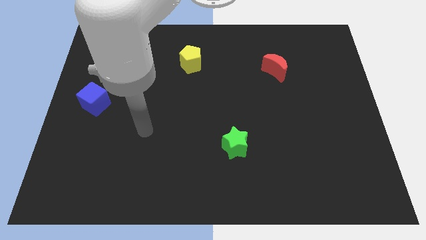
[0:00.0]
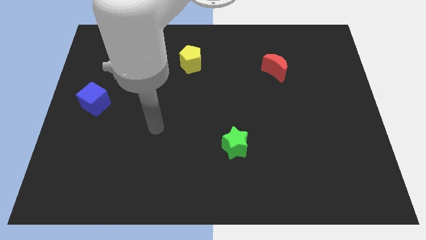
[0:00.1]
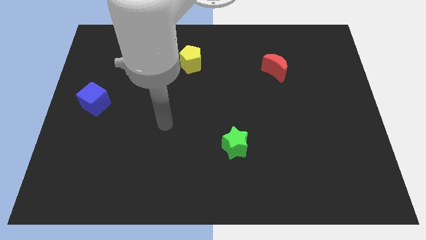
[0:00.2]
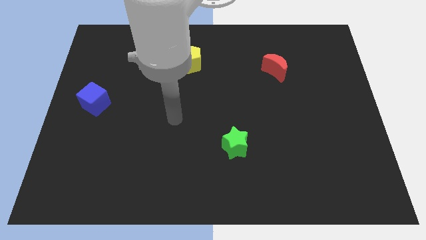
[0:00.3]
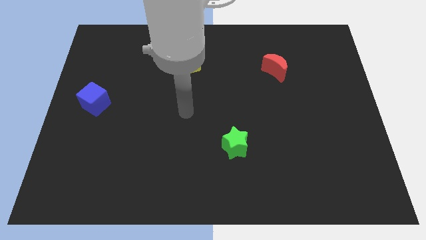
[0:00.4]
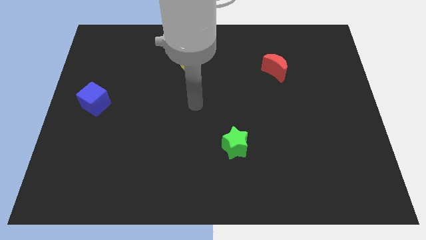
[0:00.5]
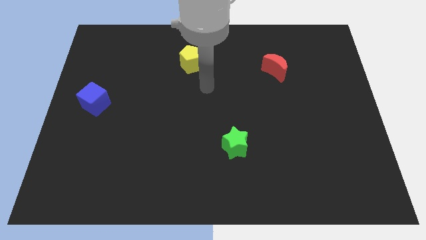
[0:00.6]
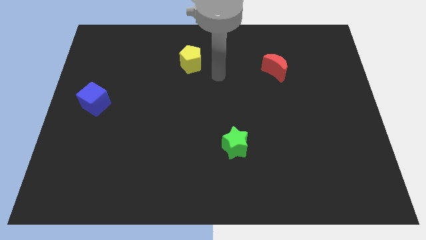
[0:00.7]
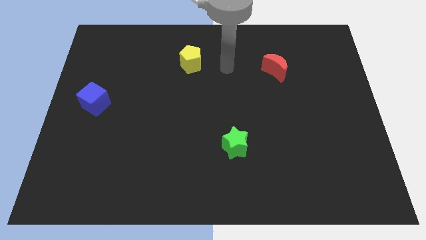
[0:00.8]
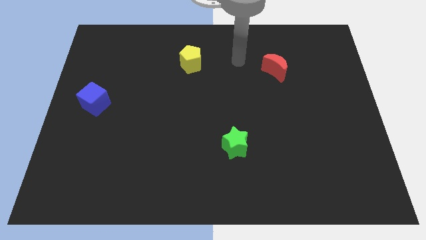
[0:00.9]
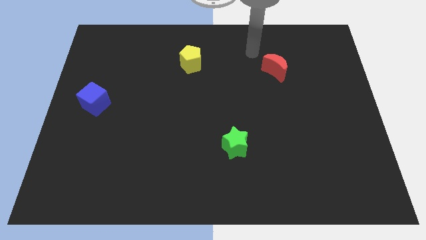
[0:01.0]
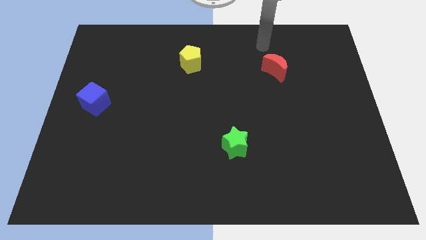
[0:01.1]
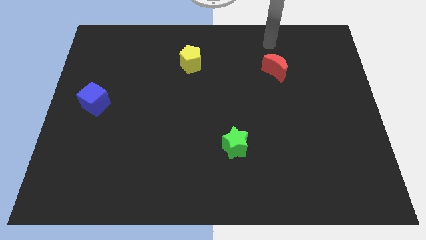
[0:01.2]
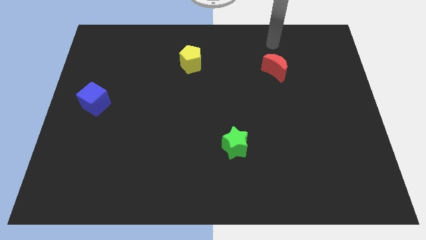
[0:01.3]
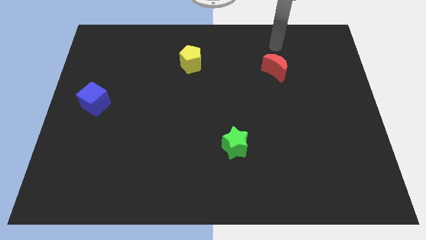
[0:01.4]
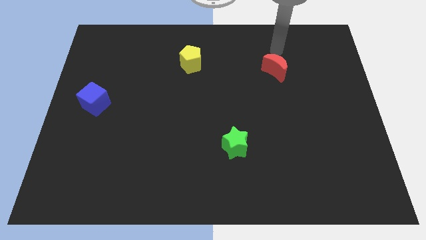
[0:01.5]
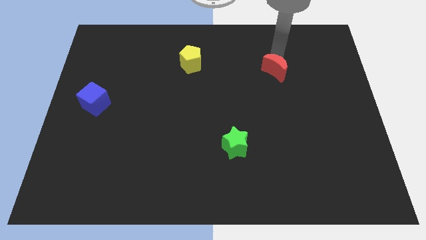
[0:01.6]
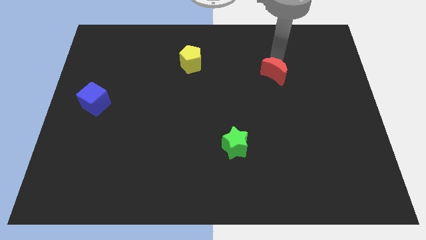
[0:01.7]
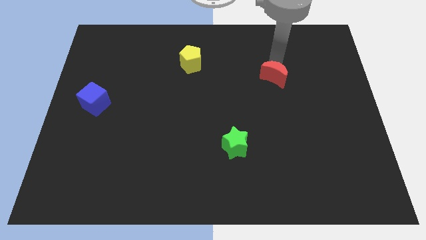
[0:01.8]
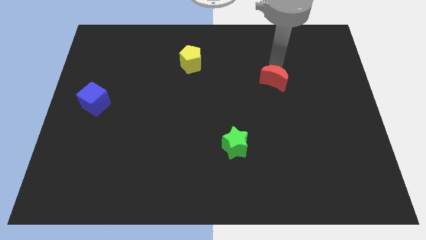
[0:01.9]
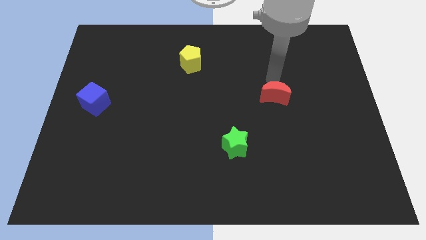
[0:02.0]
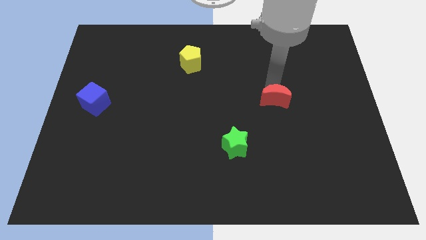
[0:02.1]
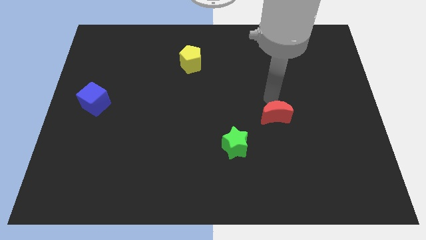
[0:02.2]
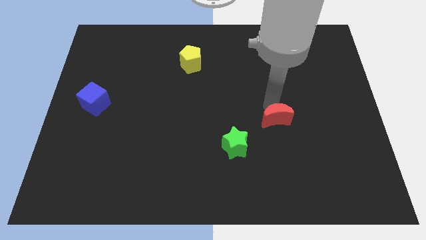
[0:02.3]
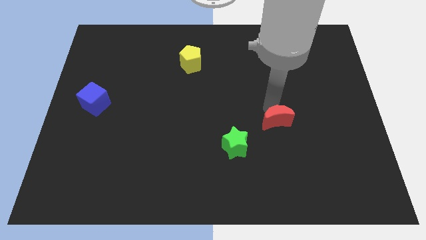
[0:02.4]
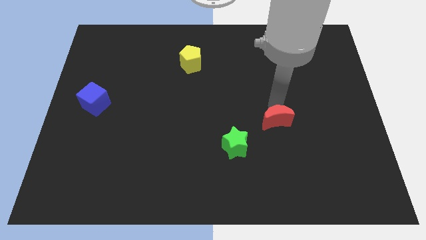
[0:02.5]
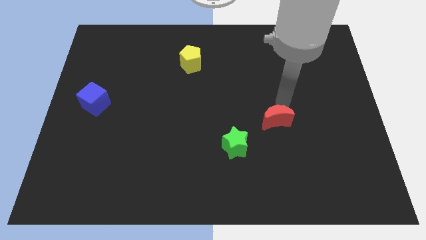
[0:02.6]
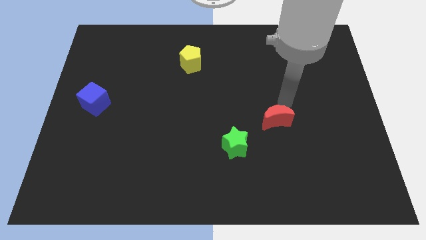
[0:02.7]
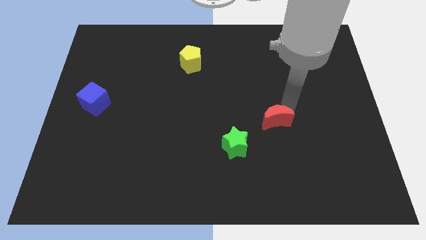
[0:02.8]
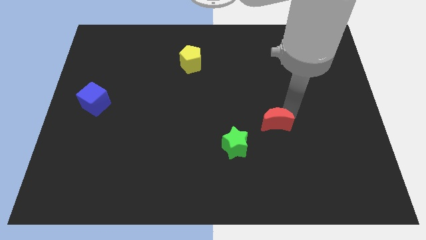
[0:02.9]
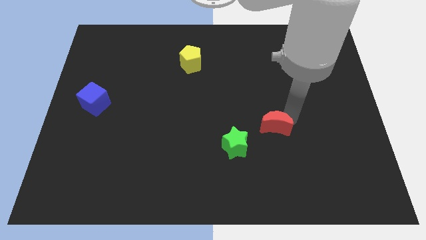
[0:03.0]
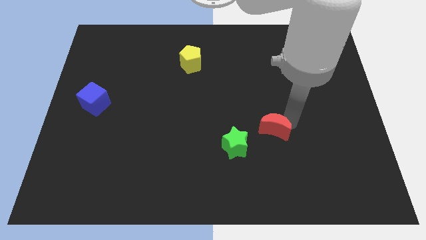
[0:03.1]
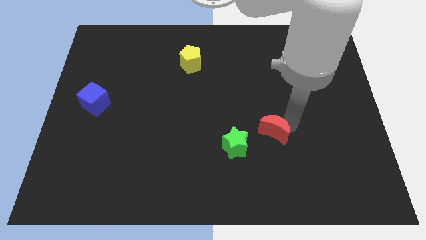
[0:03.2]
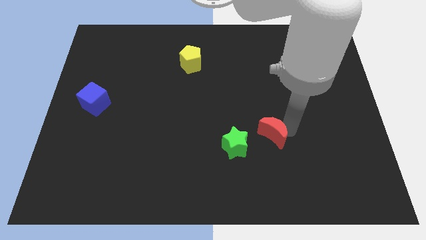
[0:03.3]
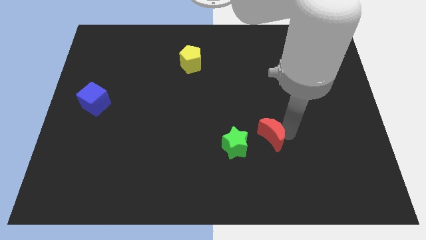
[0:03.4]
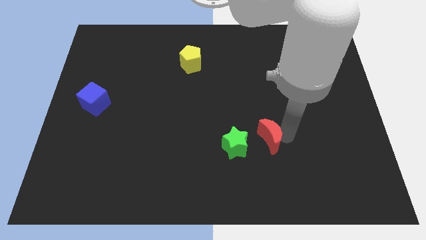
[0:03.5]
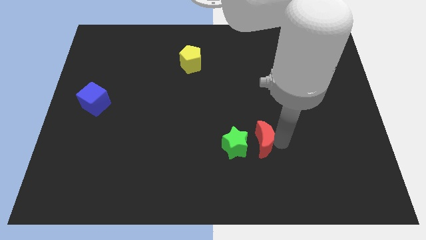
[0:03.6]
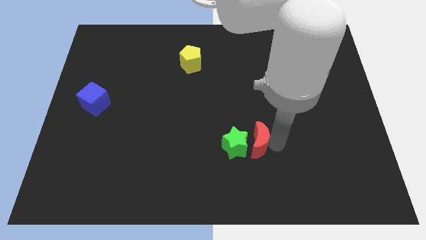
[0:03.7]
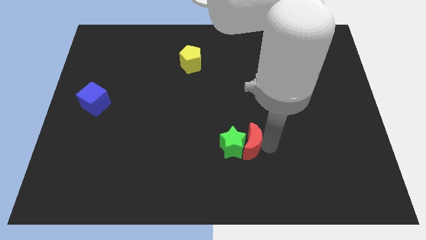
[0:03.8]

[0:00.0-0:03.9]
put the moon towards the green star

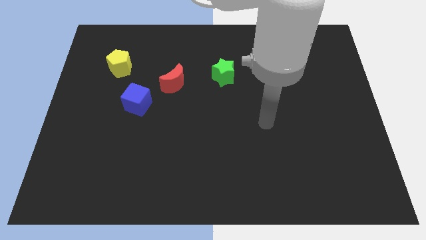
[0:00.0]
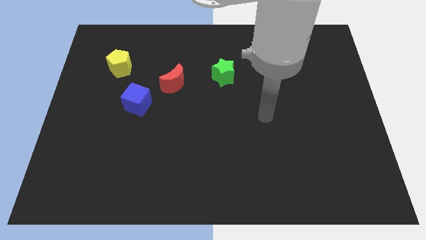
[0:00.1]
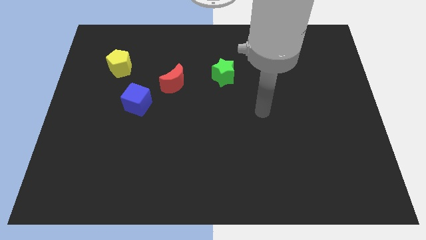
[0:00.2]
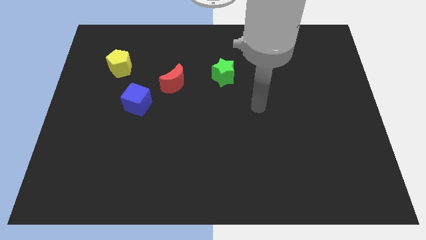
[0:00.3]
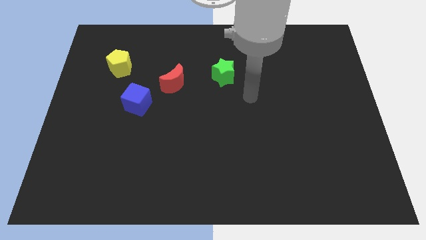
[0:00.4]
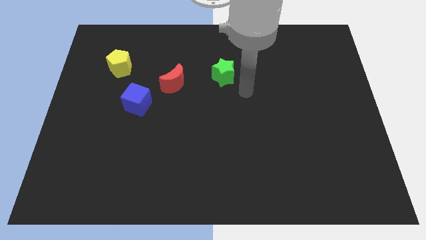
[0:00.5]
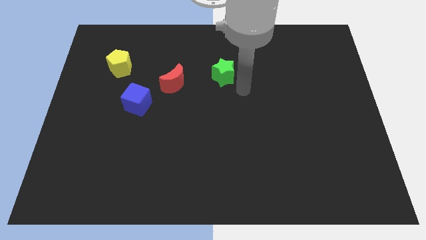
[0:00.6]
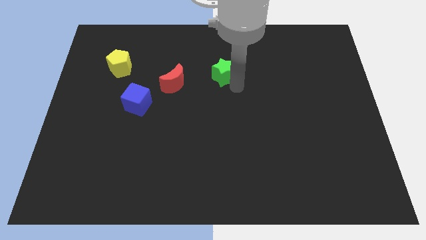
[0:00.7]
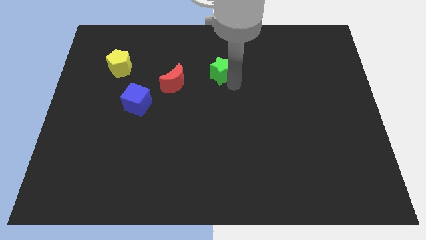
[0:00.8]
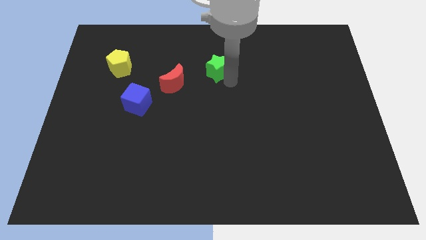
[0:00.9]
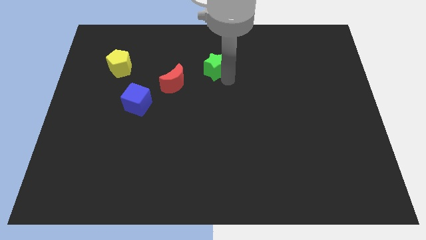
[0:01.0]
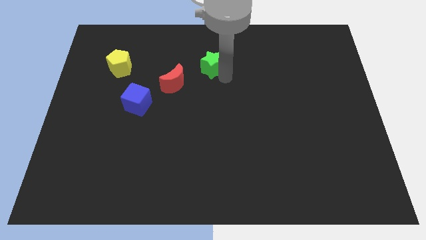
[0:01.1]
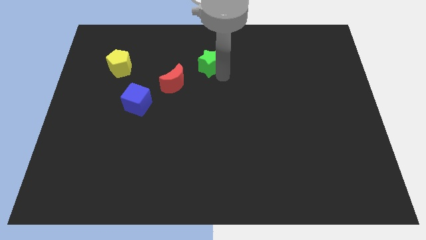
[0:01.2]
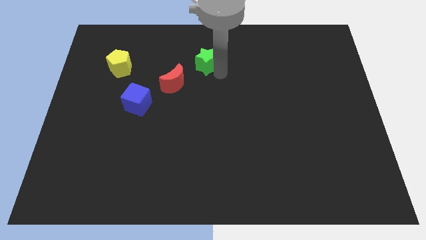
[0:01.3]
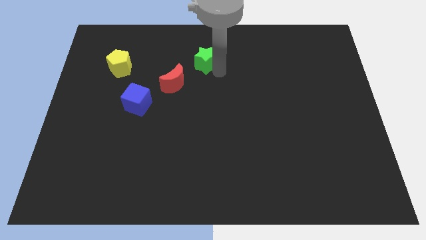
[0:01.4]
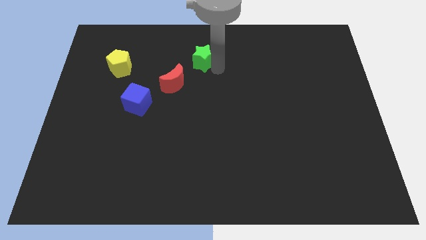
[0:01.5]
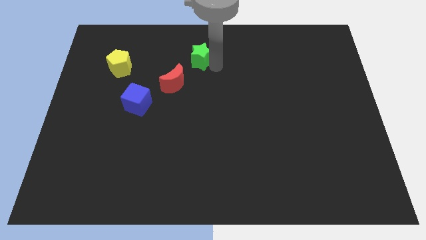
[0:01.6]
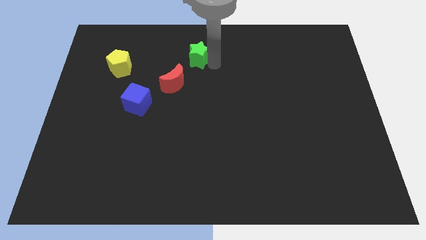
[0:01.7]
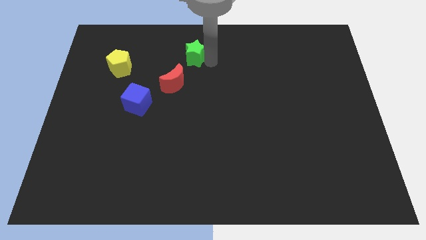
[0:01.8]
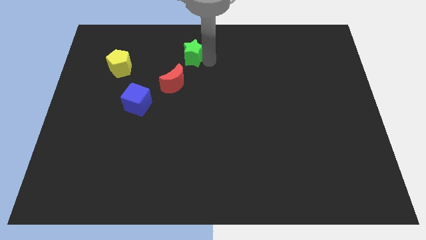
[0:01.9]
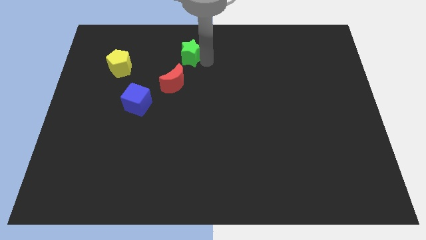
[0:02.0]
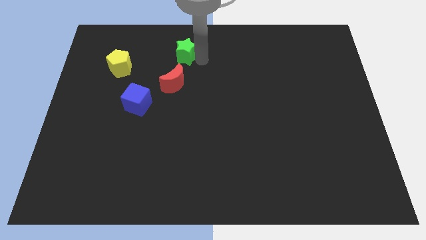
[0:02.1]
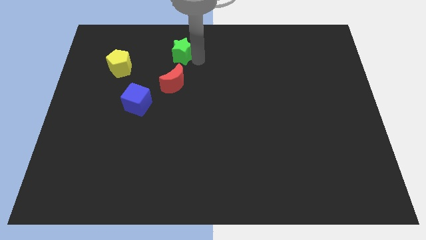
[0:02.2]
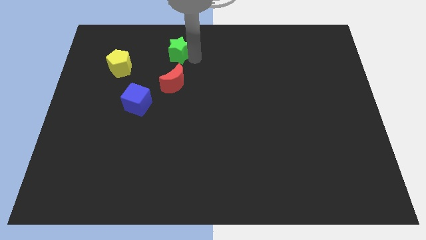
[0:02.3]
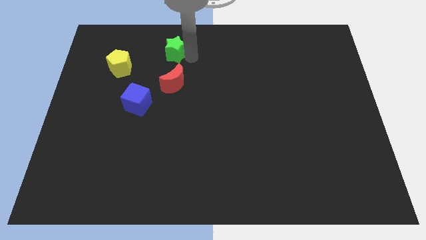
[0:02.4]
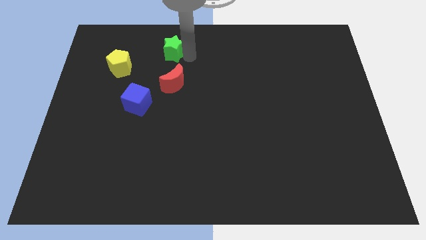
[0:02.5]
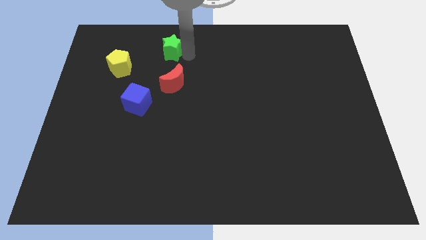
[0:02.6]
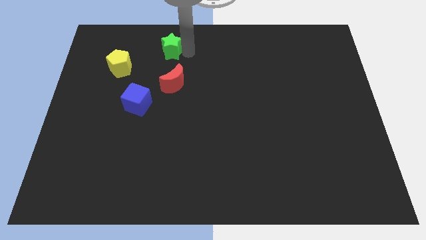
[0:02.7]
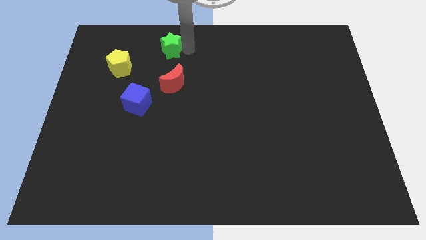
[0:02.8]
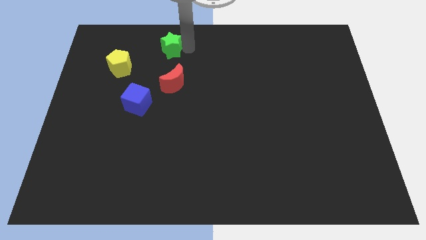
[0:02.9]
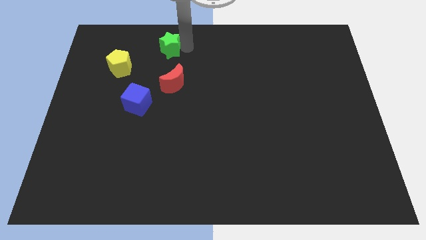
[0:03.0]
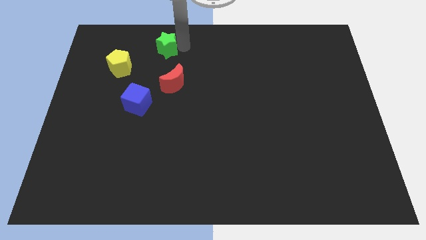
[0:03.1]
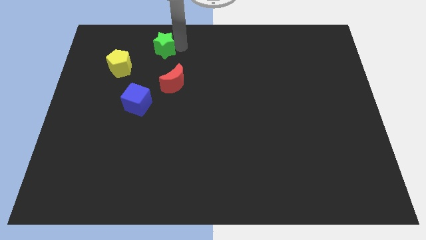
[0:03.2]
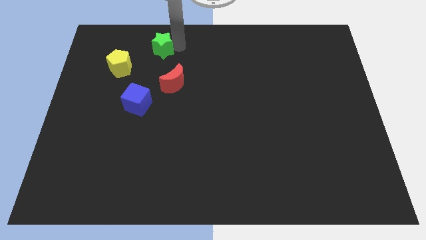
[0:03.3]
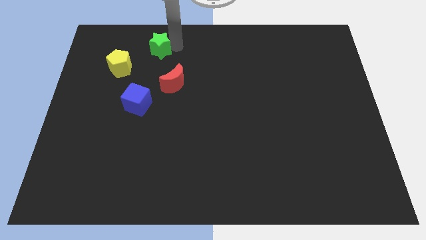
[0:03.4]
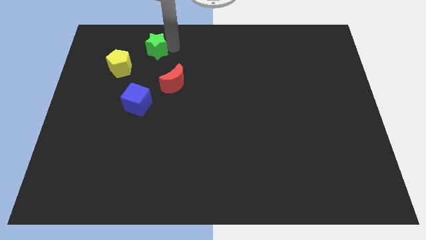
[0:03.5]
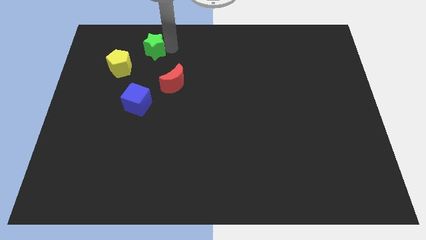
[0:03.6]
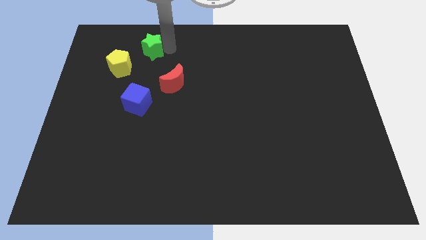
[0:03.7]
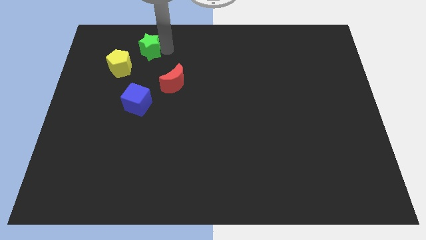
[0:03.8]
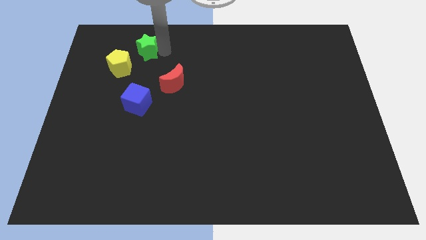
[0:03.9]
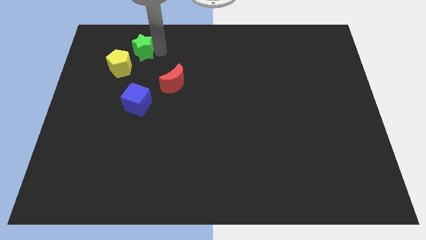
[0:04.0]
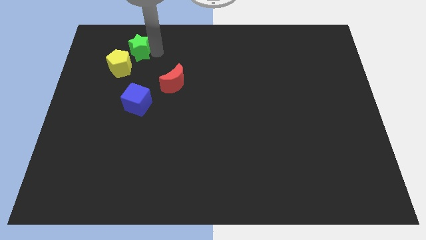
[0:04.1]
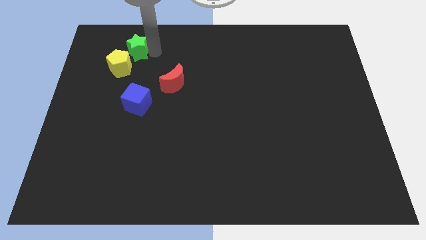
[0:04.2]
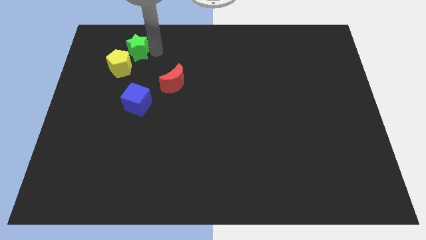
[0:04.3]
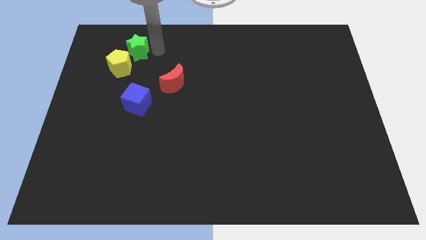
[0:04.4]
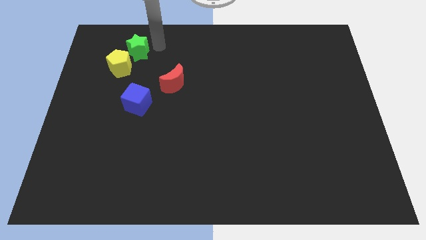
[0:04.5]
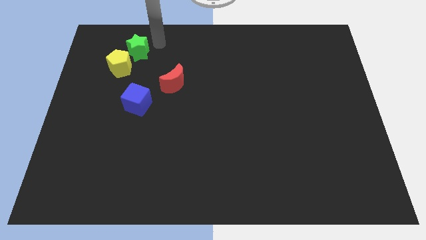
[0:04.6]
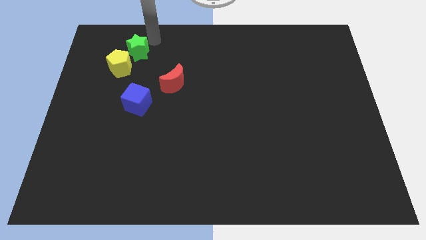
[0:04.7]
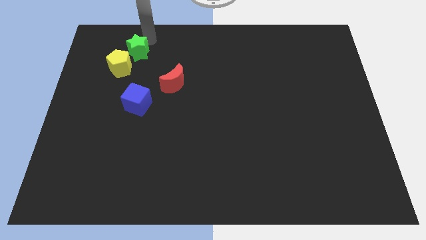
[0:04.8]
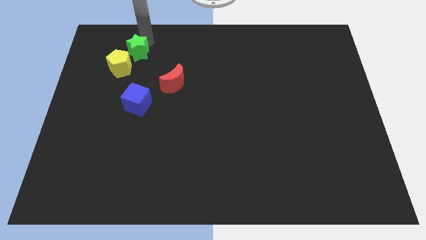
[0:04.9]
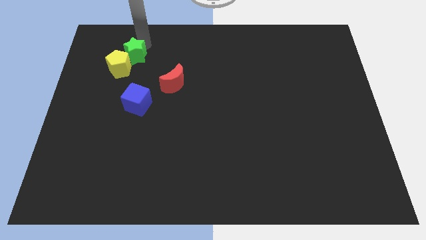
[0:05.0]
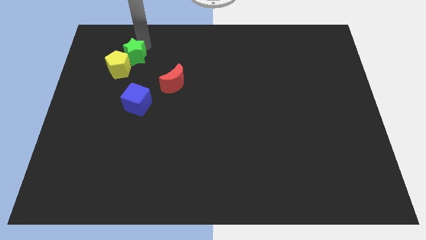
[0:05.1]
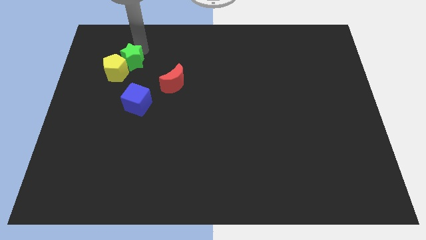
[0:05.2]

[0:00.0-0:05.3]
put the green star to the yellow block
